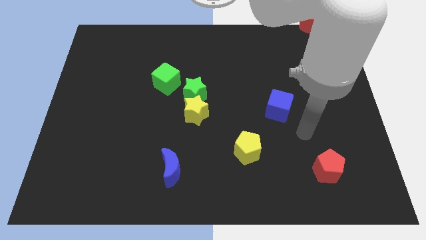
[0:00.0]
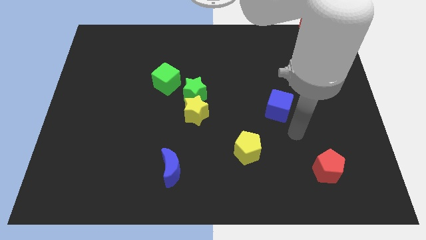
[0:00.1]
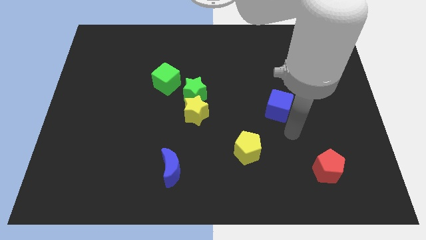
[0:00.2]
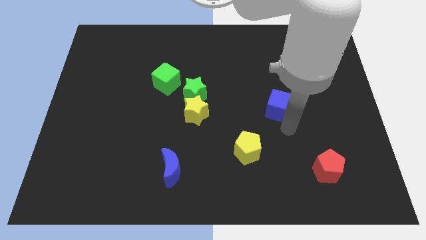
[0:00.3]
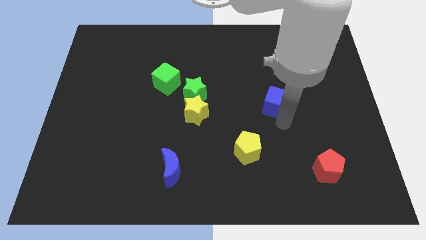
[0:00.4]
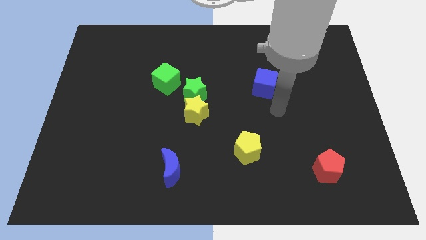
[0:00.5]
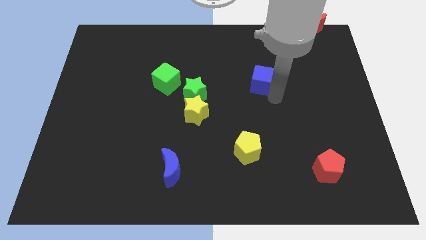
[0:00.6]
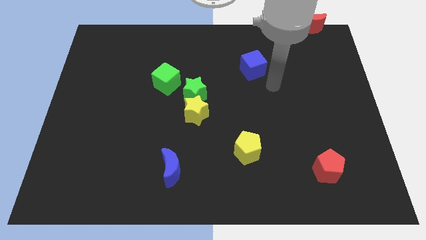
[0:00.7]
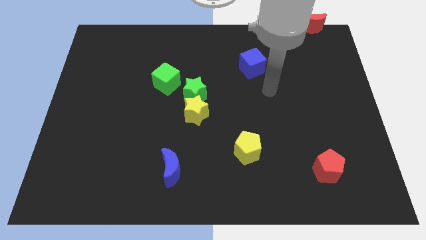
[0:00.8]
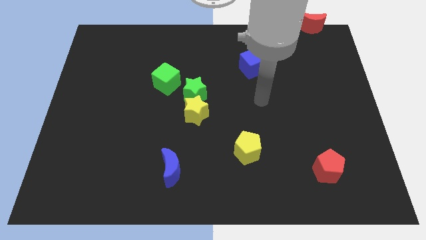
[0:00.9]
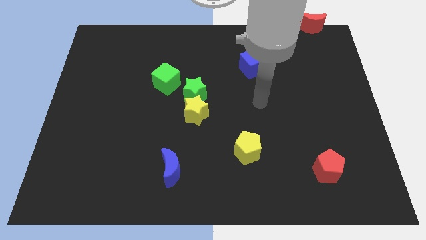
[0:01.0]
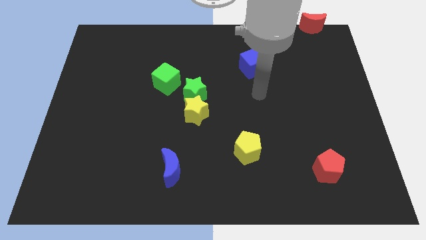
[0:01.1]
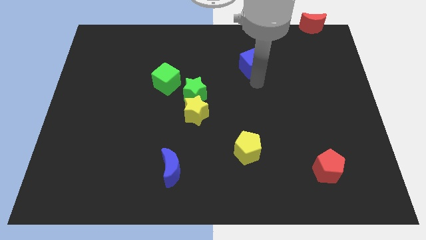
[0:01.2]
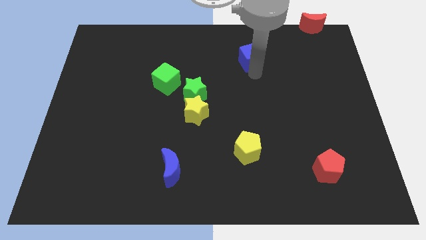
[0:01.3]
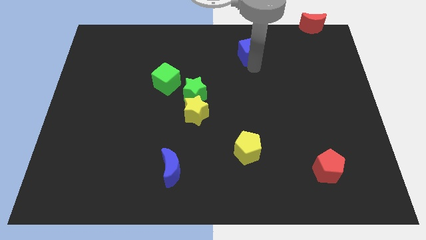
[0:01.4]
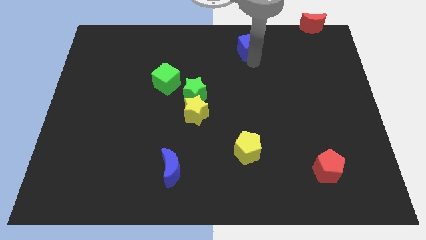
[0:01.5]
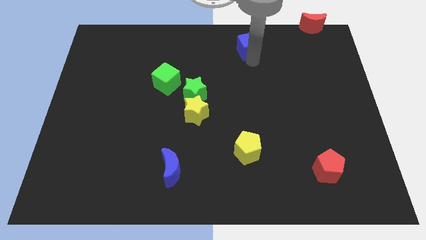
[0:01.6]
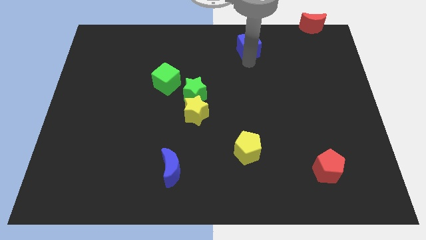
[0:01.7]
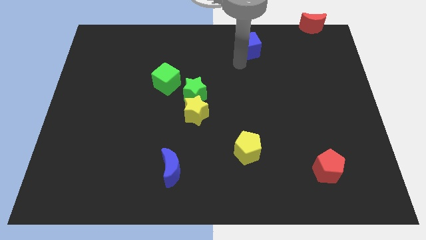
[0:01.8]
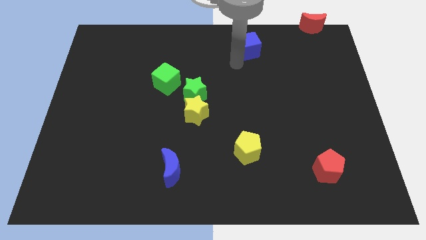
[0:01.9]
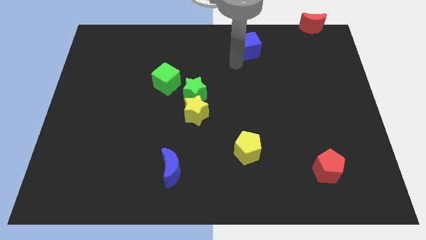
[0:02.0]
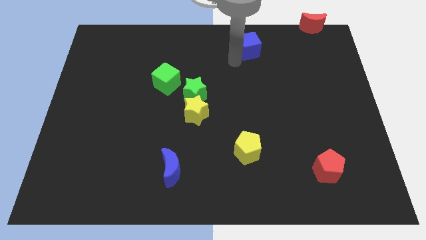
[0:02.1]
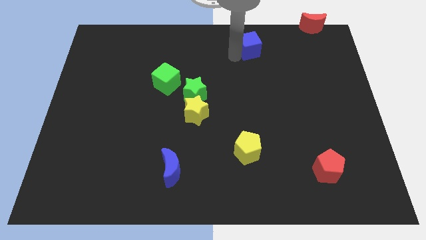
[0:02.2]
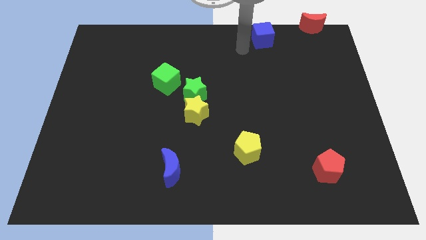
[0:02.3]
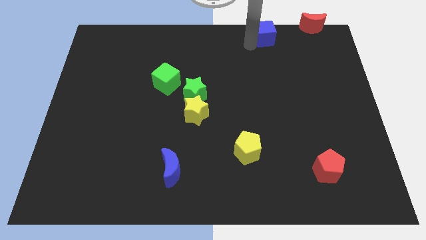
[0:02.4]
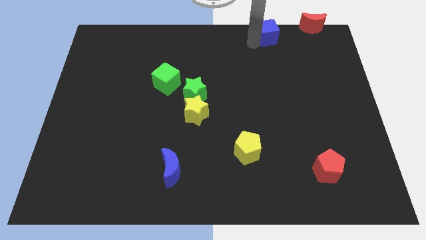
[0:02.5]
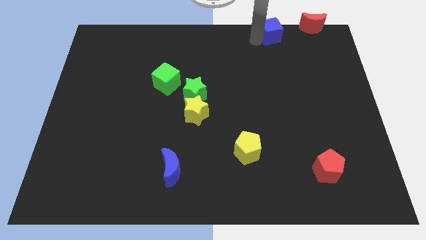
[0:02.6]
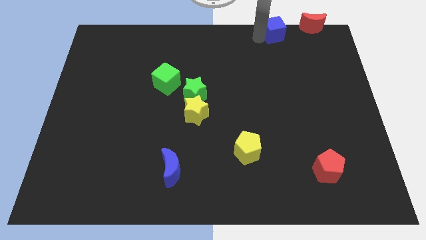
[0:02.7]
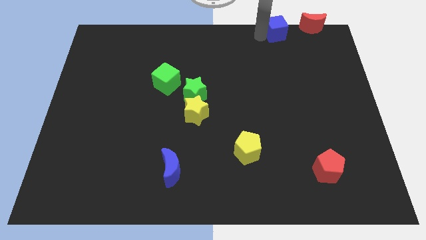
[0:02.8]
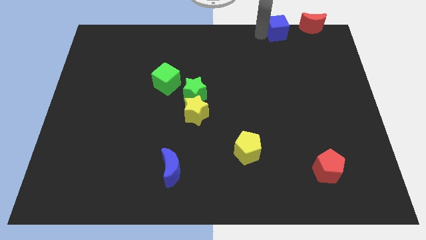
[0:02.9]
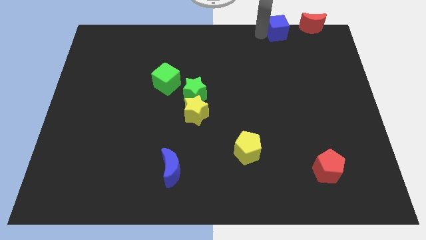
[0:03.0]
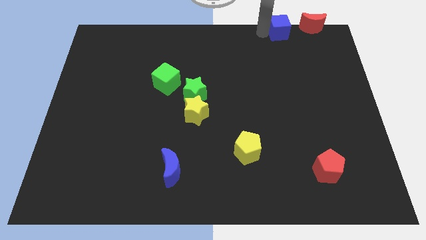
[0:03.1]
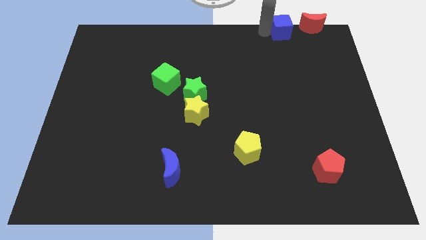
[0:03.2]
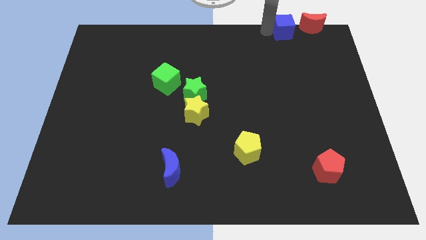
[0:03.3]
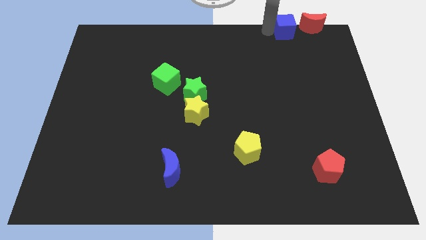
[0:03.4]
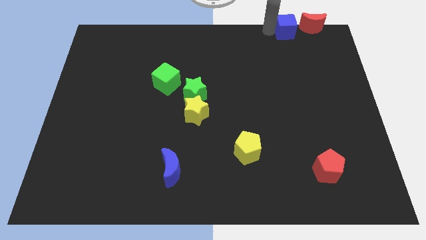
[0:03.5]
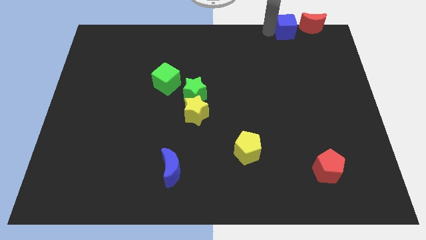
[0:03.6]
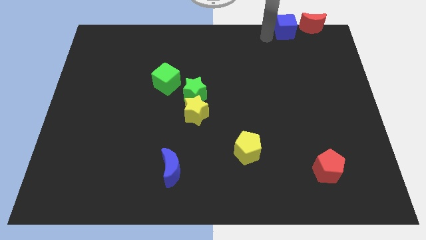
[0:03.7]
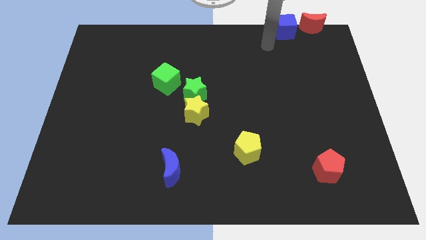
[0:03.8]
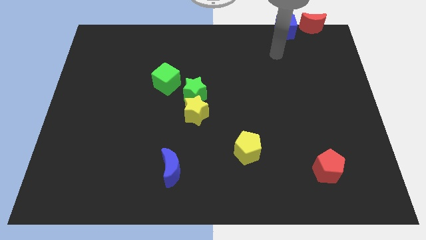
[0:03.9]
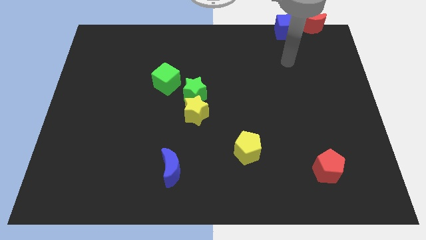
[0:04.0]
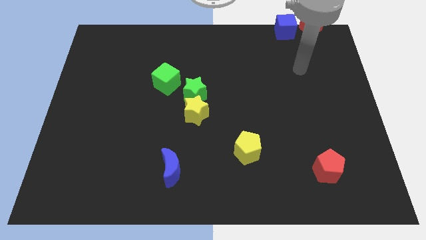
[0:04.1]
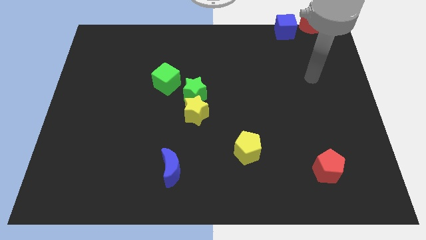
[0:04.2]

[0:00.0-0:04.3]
push the blue cube beside the red crescent

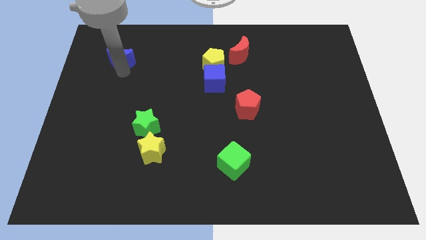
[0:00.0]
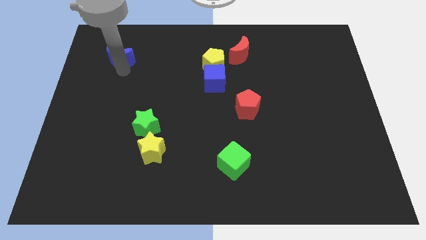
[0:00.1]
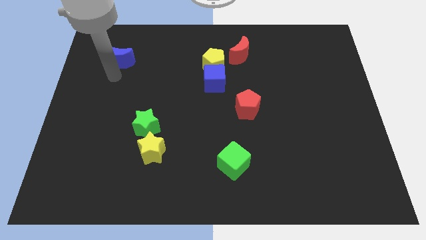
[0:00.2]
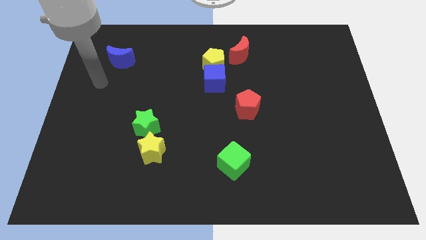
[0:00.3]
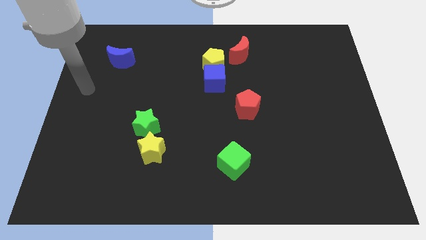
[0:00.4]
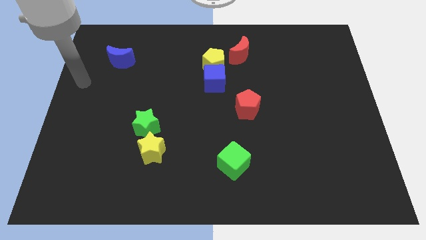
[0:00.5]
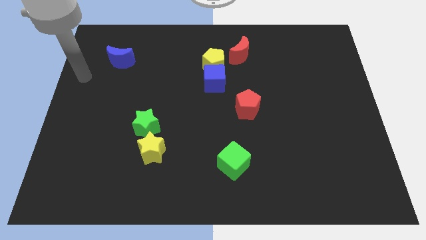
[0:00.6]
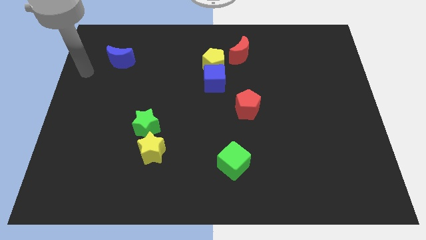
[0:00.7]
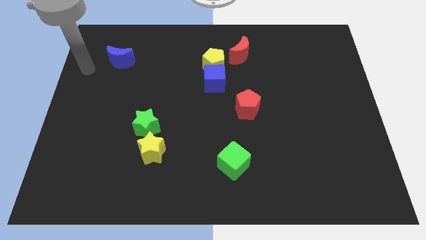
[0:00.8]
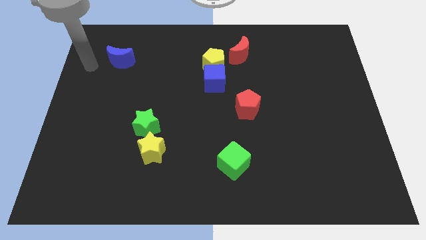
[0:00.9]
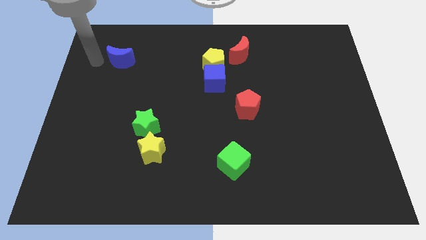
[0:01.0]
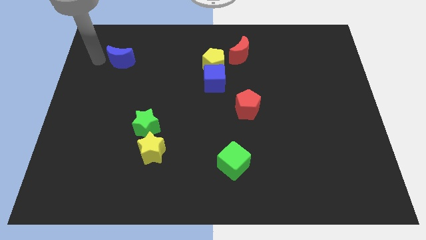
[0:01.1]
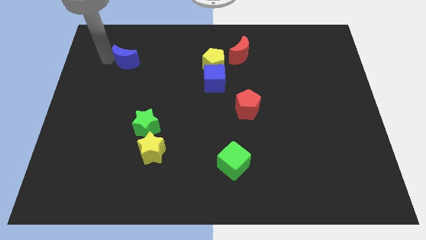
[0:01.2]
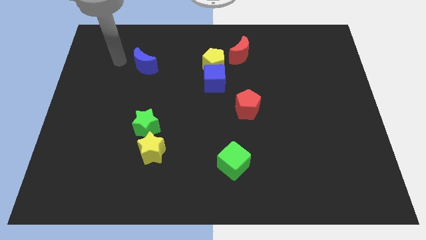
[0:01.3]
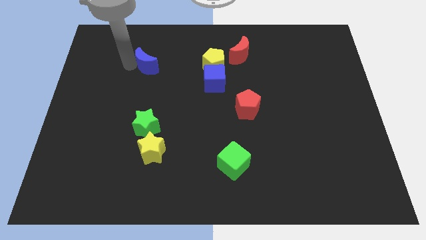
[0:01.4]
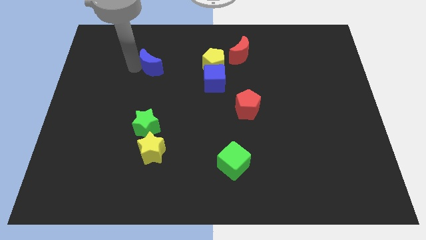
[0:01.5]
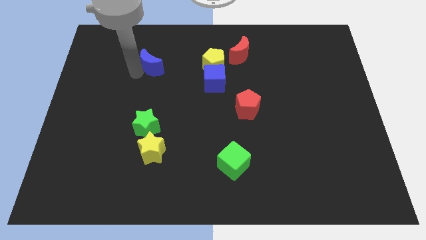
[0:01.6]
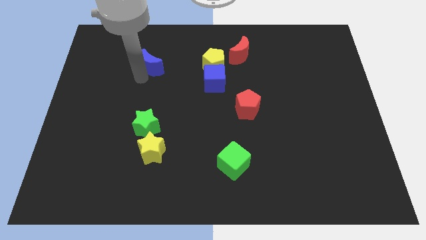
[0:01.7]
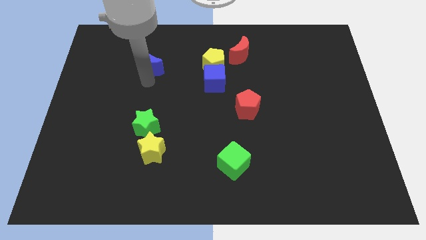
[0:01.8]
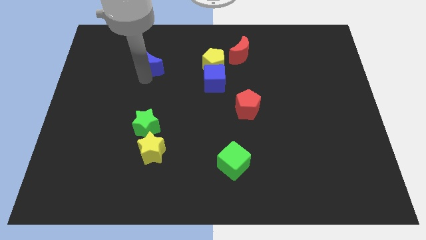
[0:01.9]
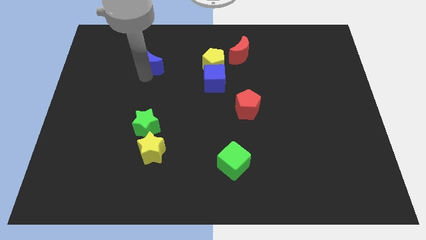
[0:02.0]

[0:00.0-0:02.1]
move the blue moon to the left of yellow pentagon

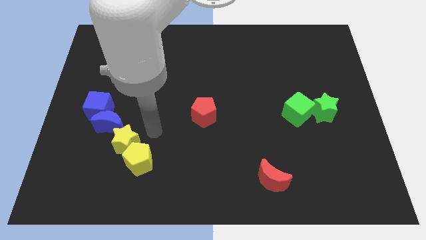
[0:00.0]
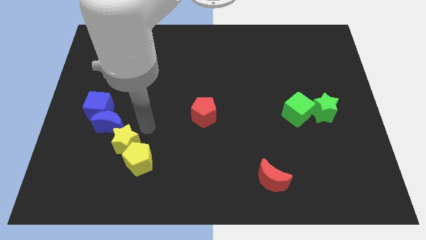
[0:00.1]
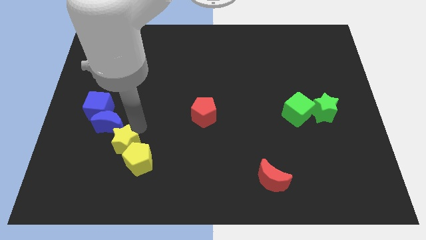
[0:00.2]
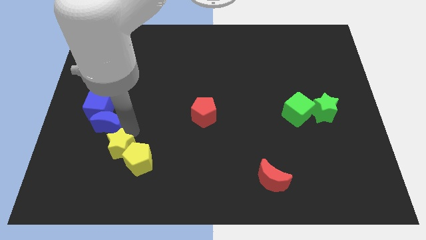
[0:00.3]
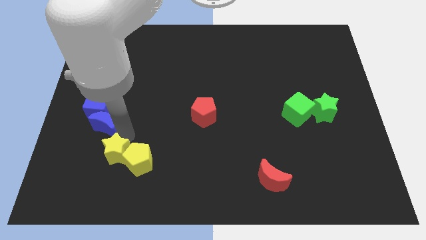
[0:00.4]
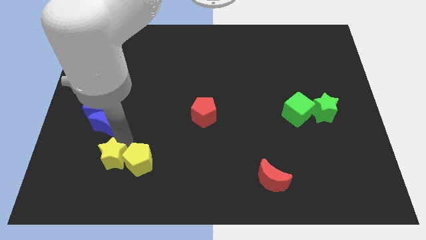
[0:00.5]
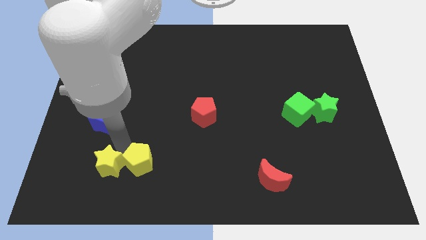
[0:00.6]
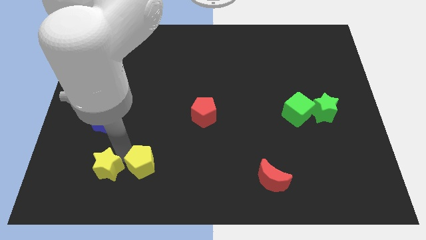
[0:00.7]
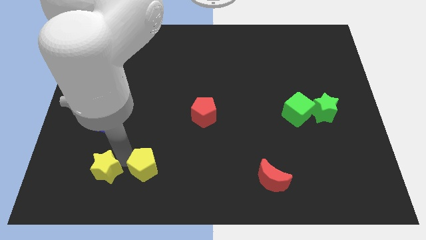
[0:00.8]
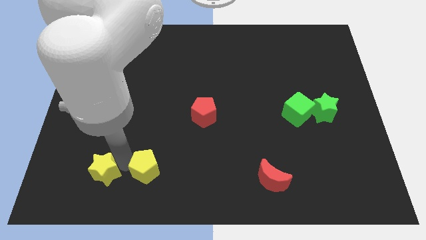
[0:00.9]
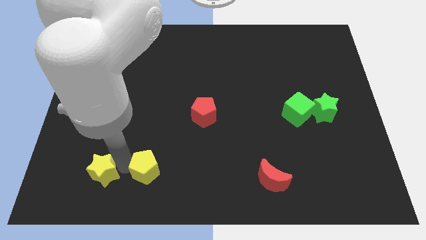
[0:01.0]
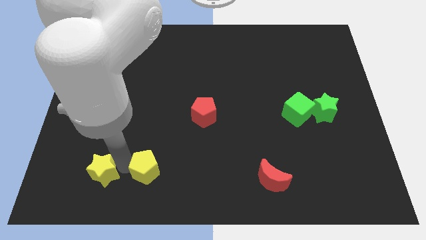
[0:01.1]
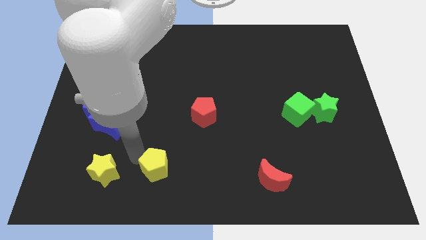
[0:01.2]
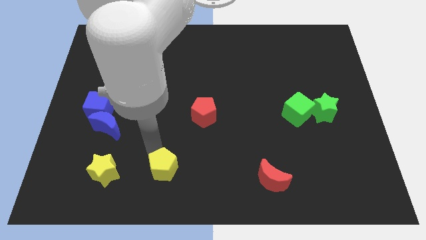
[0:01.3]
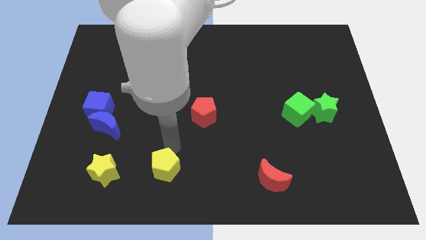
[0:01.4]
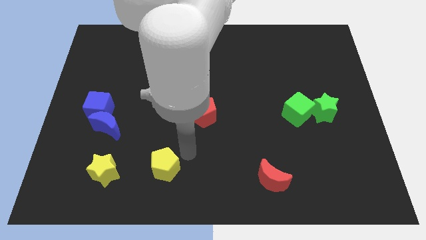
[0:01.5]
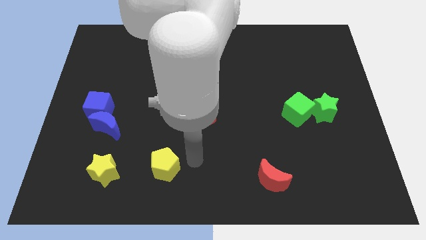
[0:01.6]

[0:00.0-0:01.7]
separate yellow star and the yellow pentagon

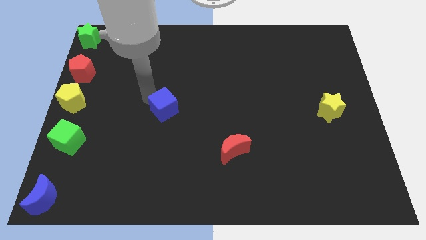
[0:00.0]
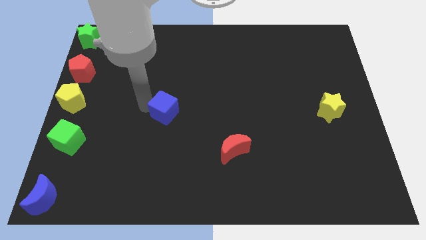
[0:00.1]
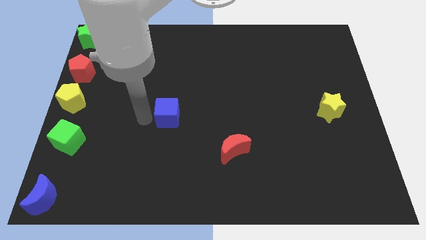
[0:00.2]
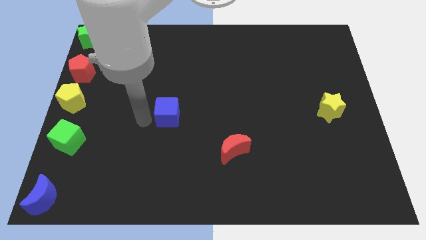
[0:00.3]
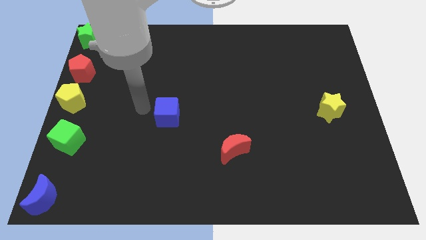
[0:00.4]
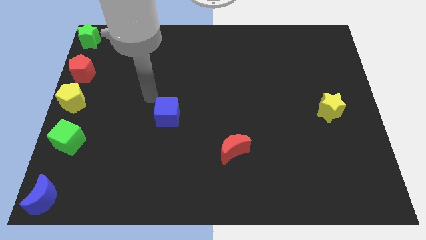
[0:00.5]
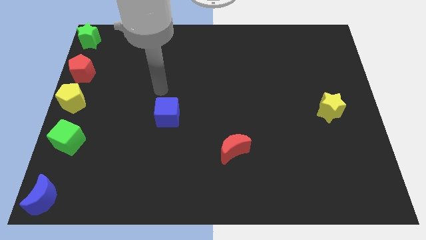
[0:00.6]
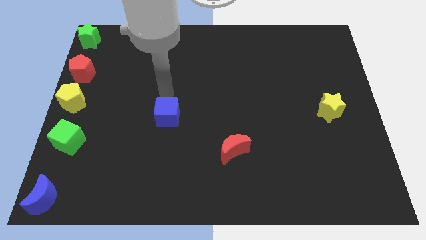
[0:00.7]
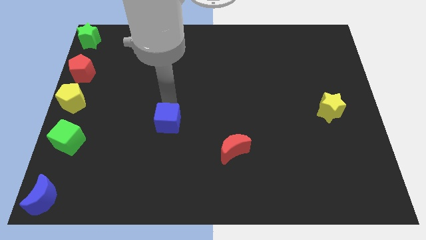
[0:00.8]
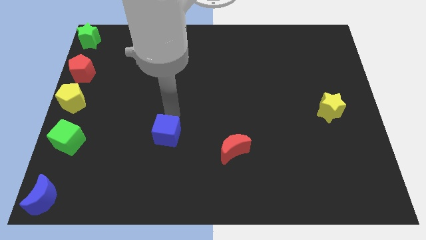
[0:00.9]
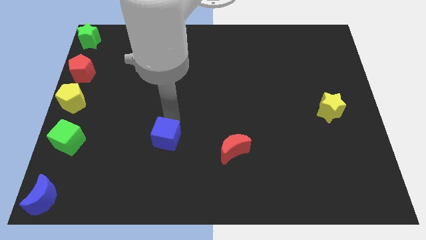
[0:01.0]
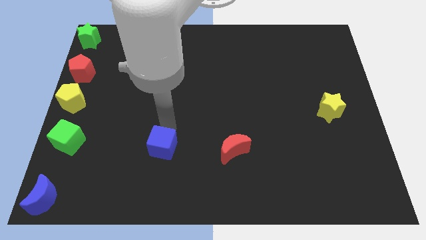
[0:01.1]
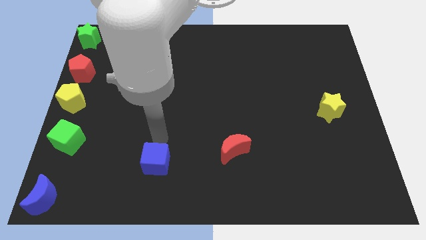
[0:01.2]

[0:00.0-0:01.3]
place the blue cube in between the green cube and the red crescent
